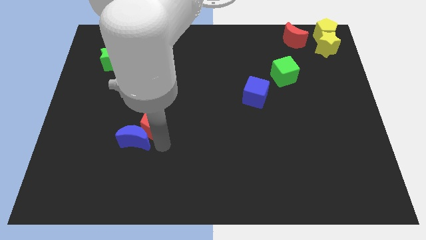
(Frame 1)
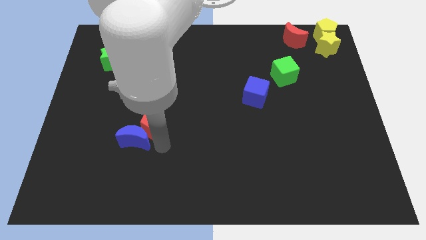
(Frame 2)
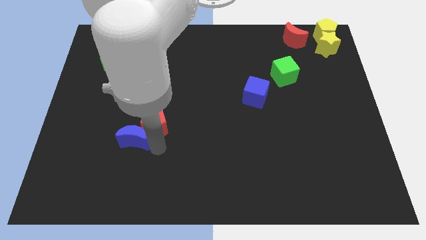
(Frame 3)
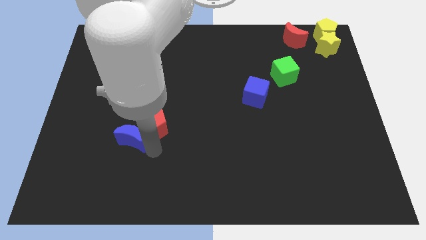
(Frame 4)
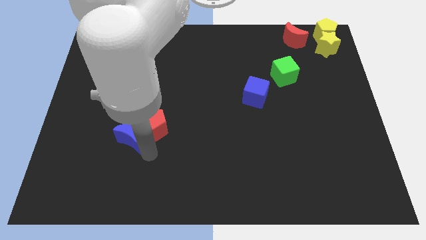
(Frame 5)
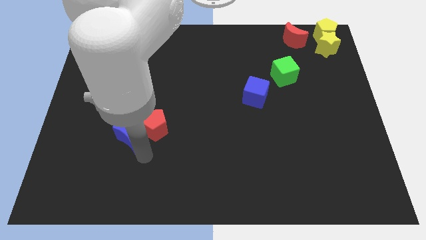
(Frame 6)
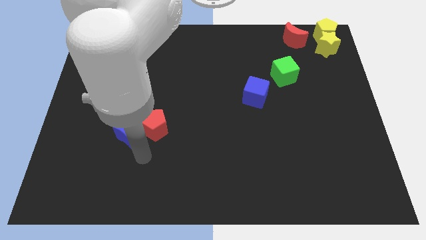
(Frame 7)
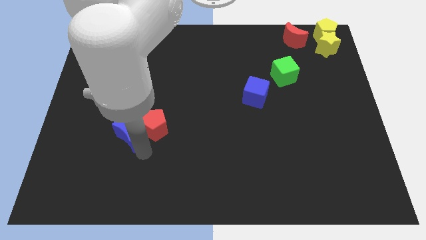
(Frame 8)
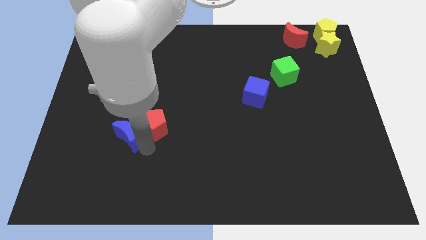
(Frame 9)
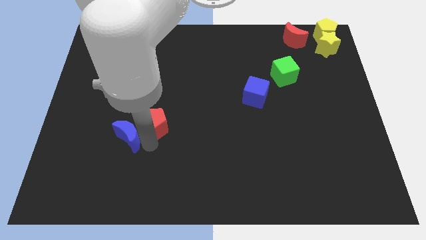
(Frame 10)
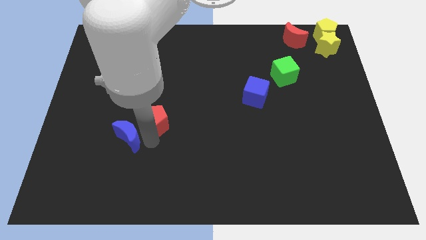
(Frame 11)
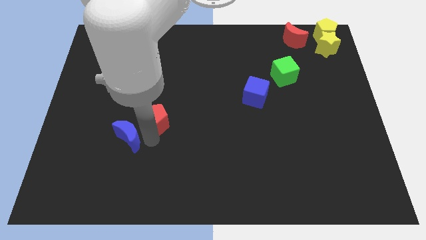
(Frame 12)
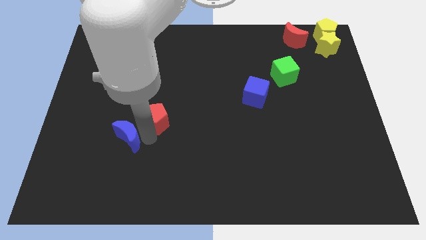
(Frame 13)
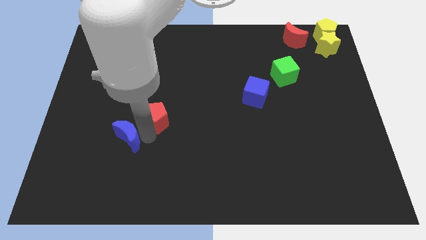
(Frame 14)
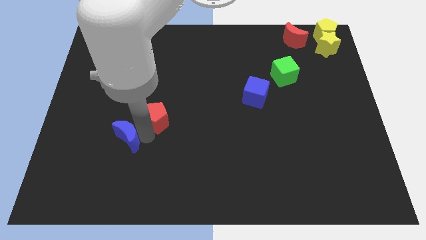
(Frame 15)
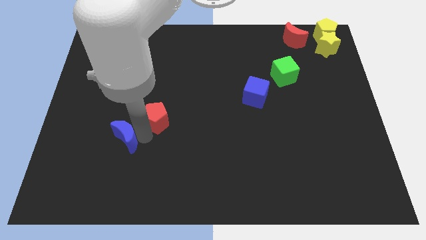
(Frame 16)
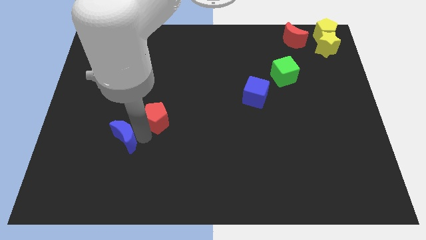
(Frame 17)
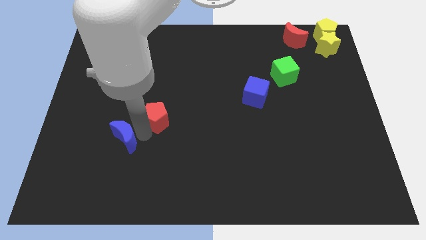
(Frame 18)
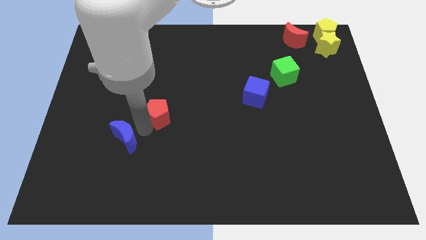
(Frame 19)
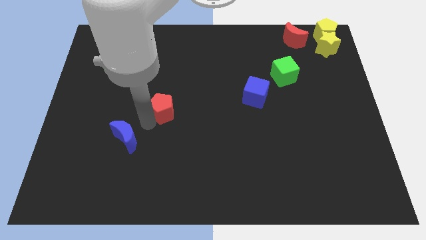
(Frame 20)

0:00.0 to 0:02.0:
separate blue moon and the red pentagon

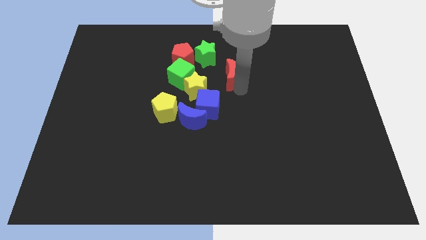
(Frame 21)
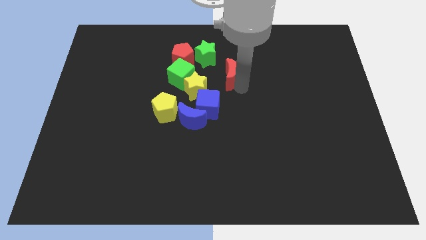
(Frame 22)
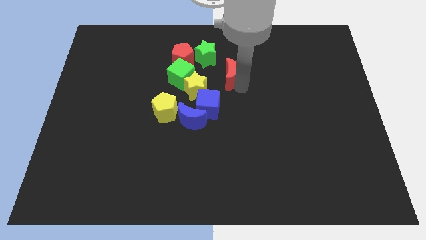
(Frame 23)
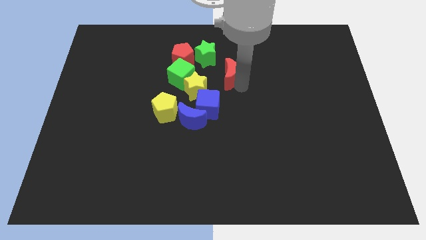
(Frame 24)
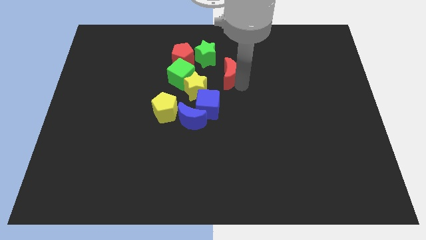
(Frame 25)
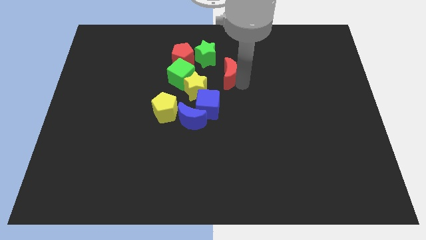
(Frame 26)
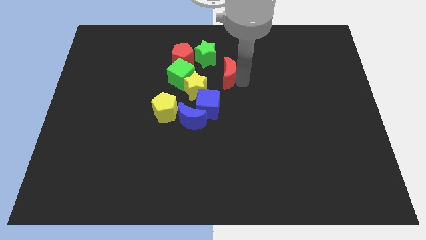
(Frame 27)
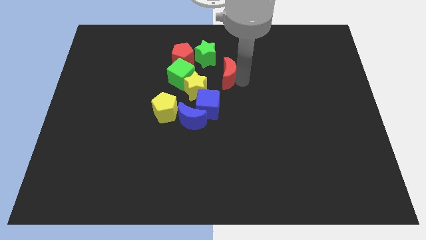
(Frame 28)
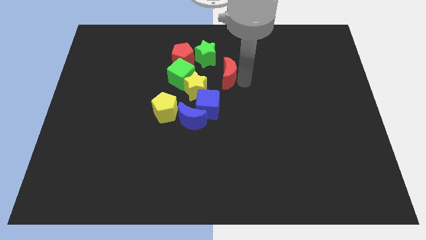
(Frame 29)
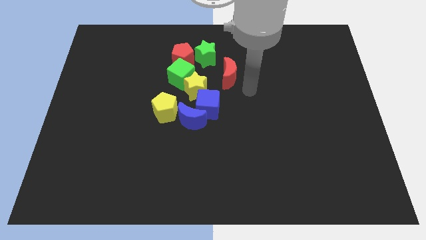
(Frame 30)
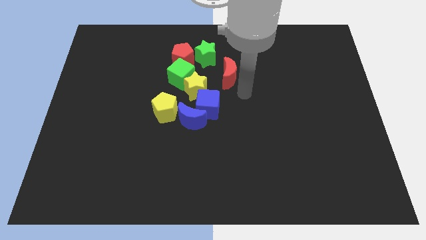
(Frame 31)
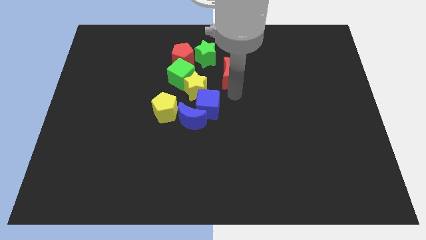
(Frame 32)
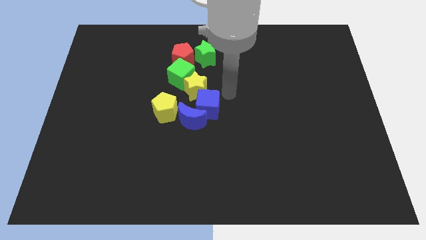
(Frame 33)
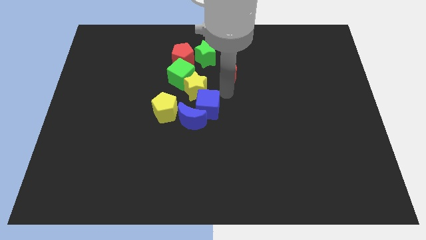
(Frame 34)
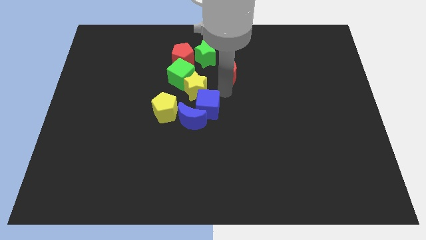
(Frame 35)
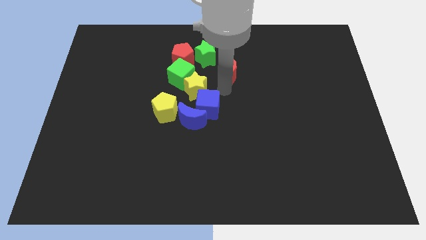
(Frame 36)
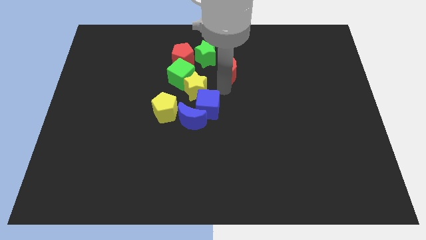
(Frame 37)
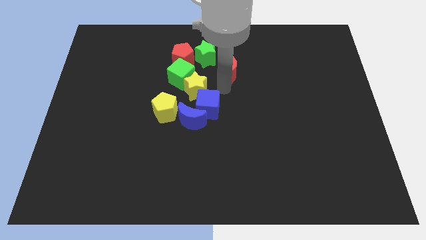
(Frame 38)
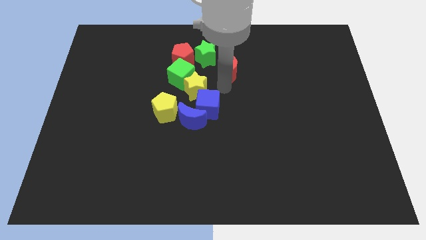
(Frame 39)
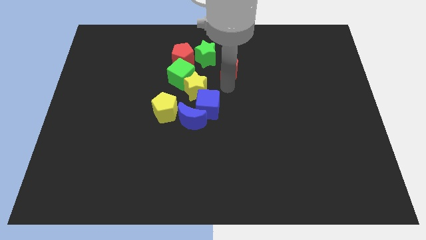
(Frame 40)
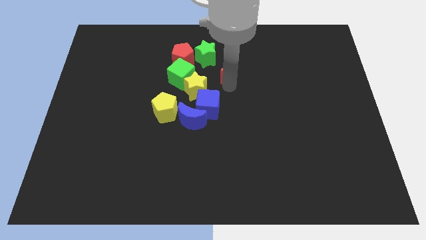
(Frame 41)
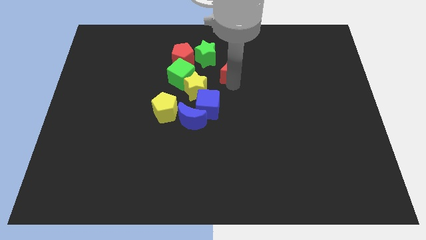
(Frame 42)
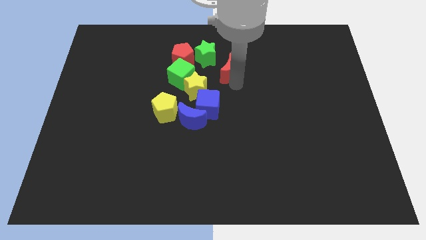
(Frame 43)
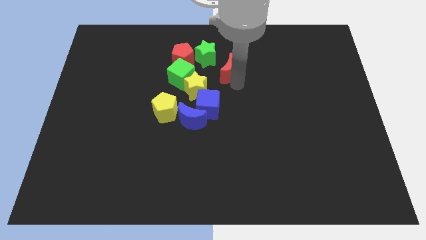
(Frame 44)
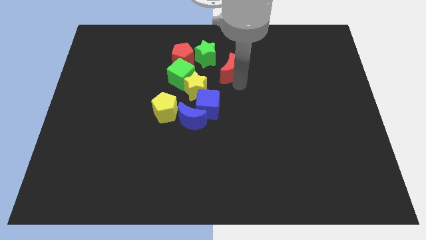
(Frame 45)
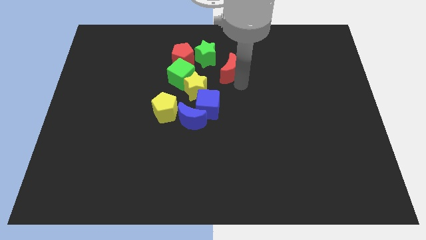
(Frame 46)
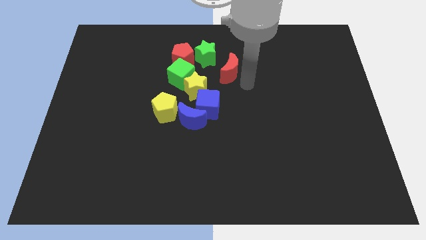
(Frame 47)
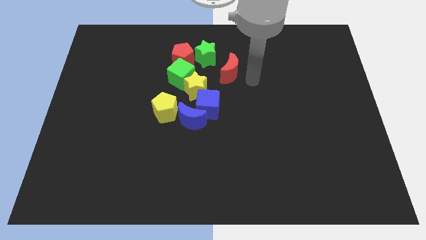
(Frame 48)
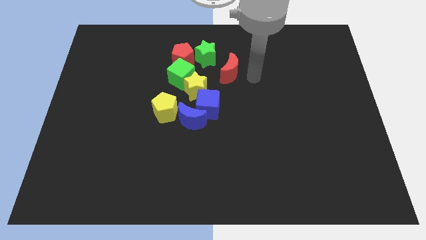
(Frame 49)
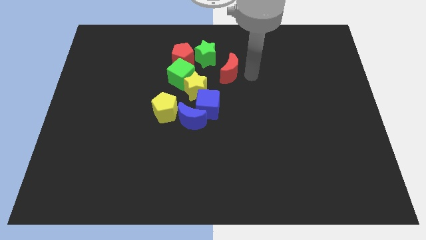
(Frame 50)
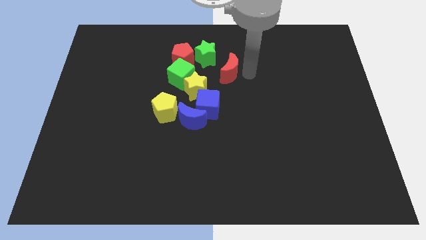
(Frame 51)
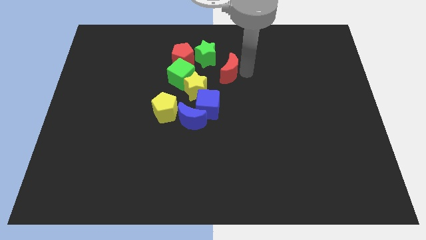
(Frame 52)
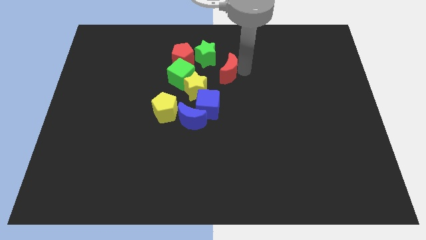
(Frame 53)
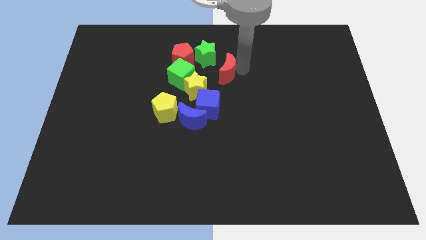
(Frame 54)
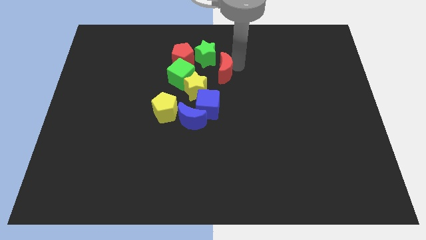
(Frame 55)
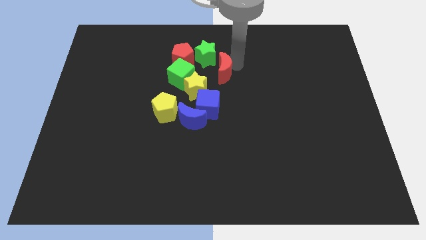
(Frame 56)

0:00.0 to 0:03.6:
move the red moon towards a group of blocks

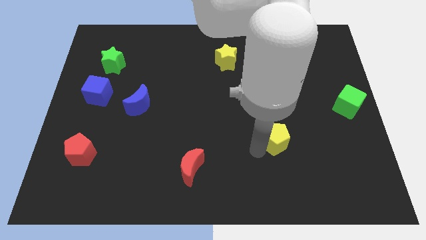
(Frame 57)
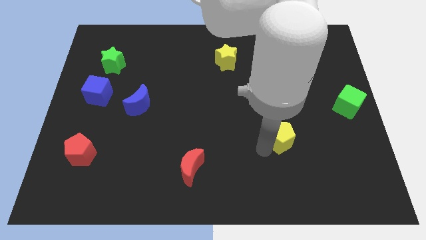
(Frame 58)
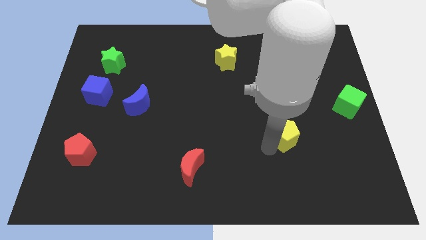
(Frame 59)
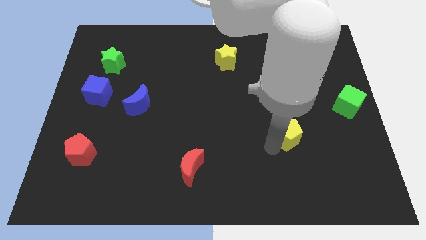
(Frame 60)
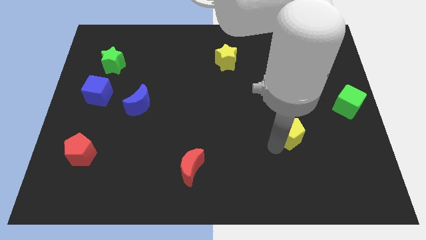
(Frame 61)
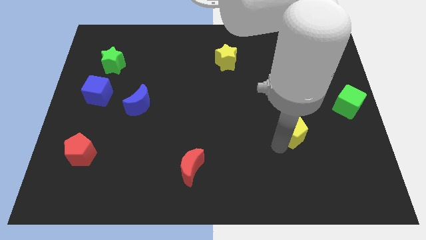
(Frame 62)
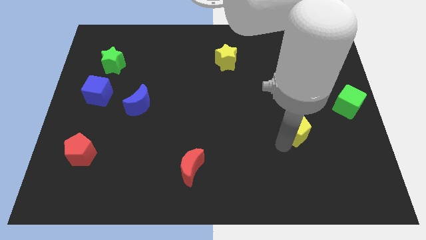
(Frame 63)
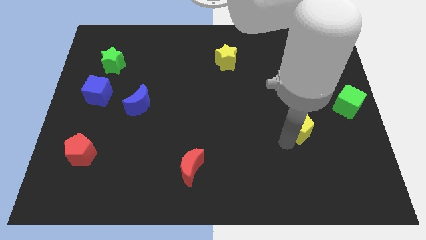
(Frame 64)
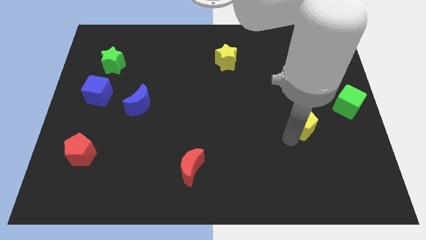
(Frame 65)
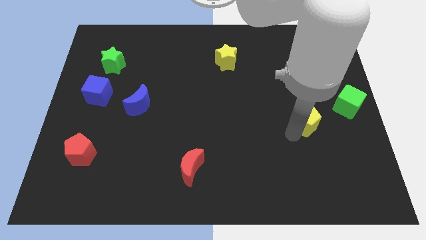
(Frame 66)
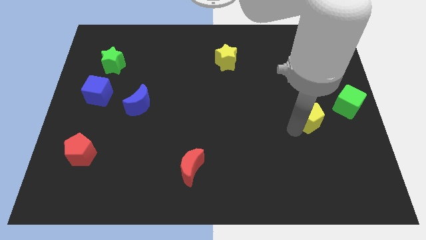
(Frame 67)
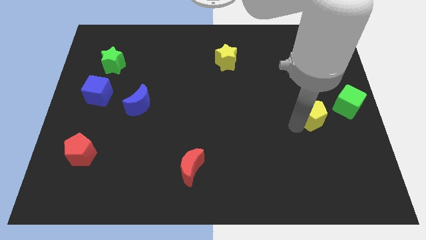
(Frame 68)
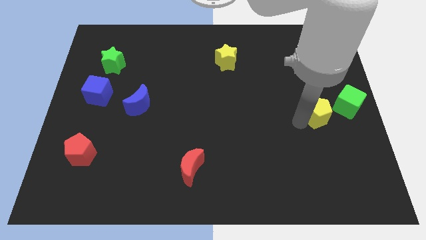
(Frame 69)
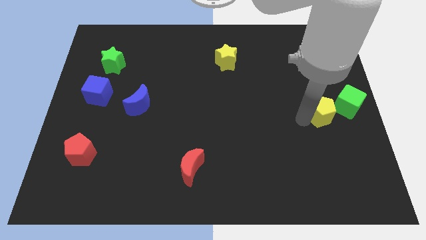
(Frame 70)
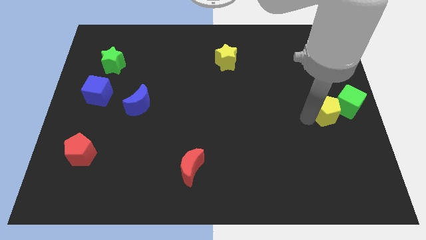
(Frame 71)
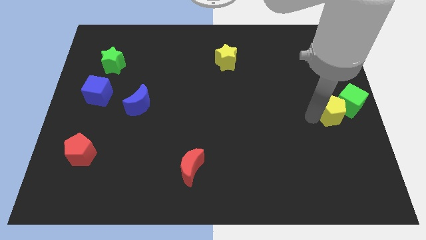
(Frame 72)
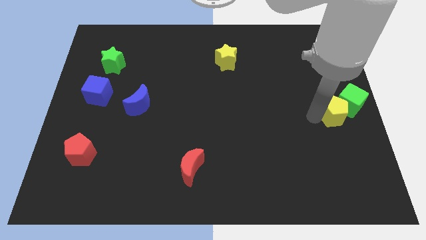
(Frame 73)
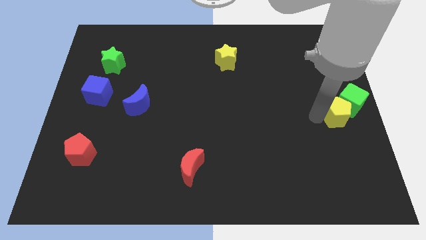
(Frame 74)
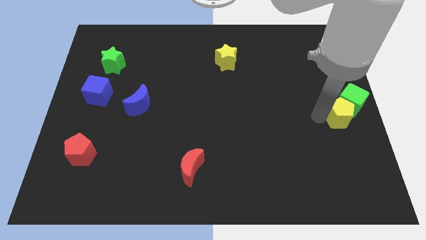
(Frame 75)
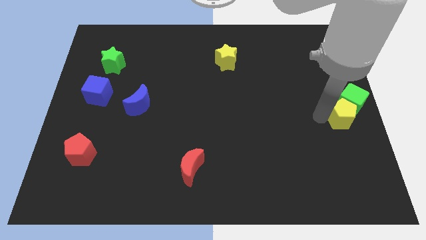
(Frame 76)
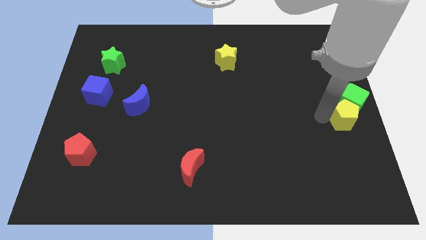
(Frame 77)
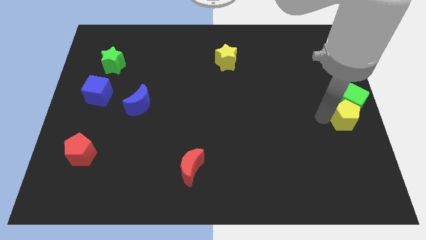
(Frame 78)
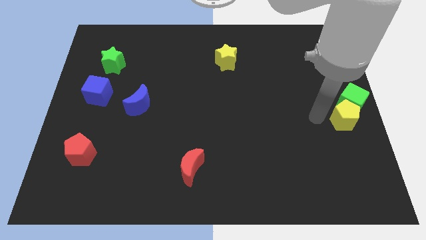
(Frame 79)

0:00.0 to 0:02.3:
move the yellow pentagon towards the green cube

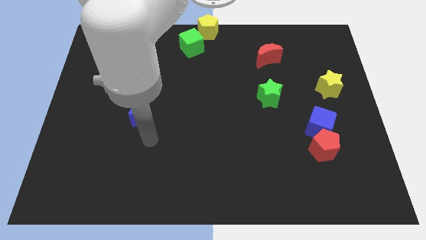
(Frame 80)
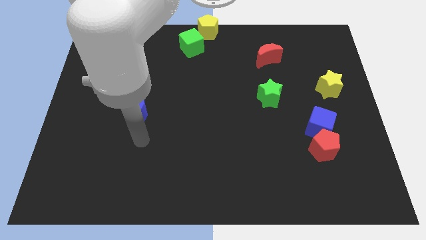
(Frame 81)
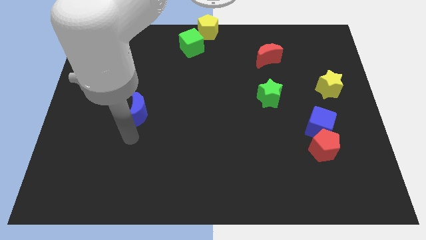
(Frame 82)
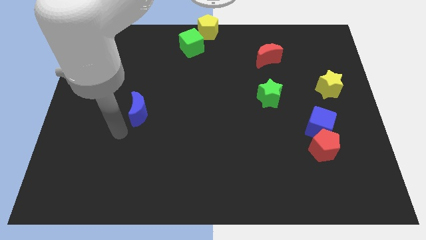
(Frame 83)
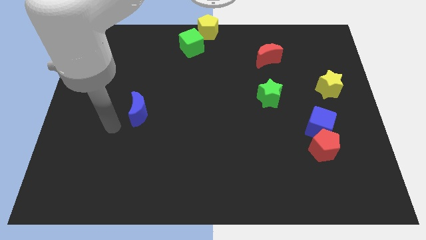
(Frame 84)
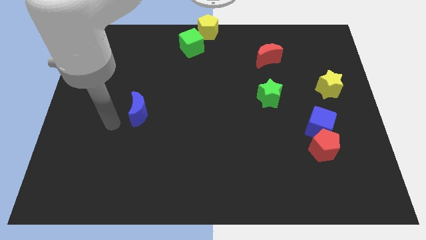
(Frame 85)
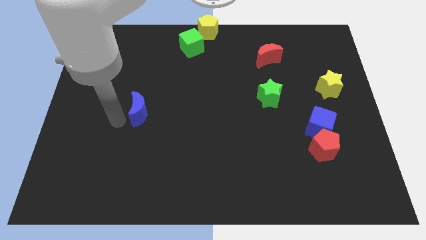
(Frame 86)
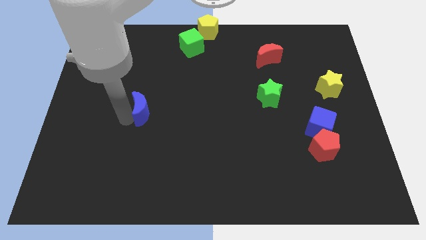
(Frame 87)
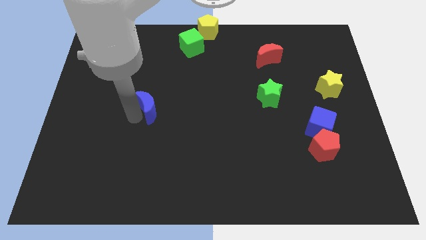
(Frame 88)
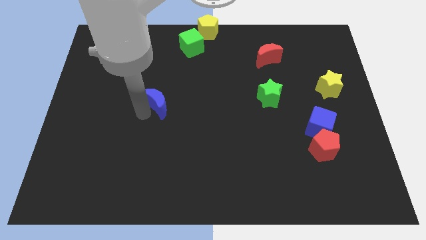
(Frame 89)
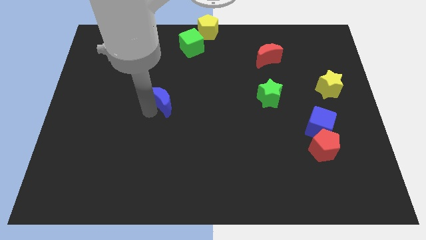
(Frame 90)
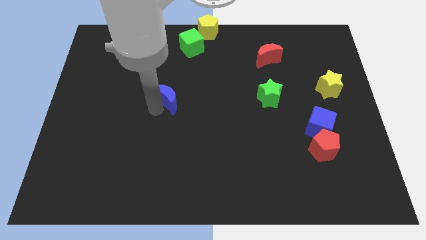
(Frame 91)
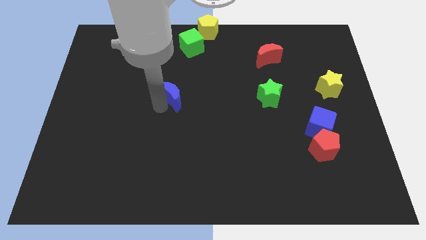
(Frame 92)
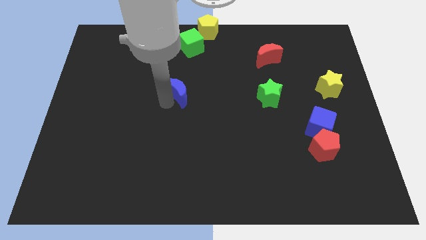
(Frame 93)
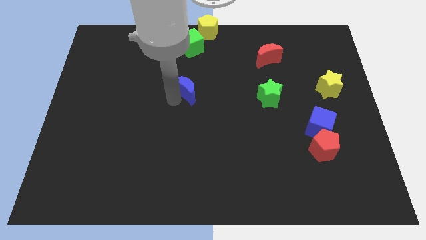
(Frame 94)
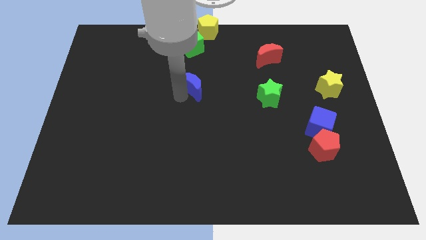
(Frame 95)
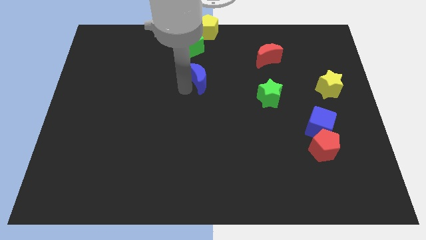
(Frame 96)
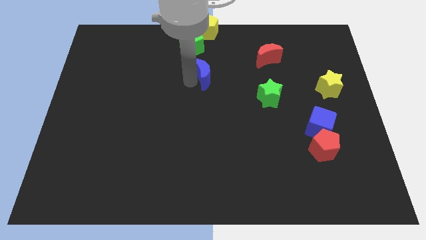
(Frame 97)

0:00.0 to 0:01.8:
push the blue cresnt towards the bottom side of the green cube
